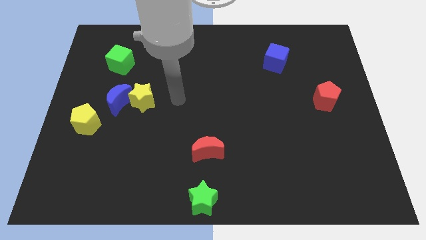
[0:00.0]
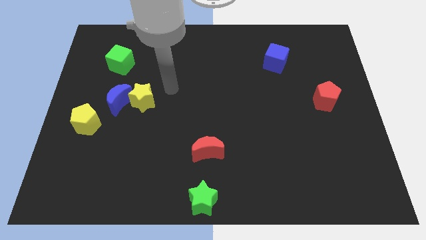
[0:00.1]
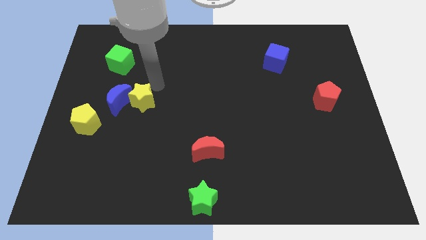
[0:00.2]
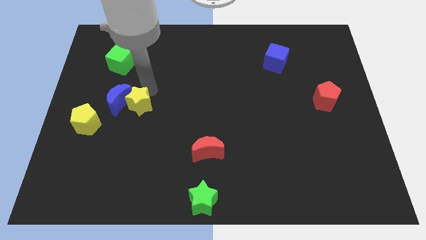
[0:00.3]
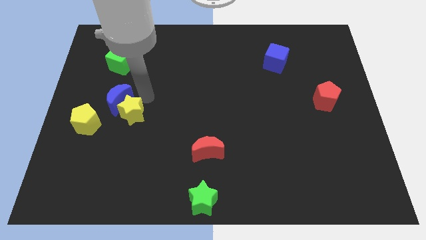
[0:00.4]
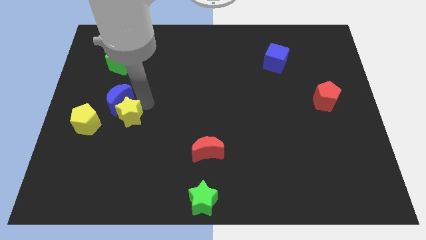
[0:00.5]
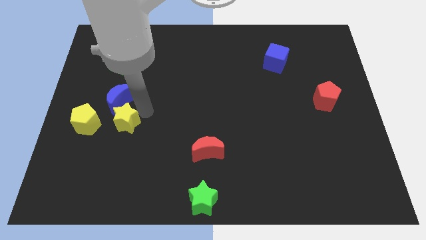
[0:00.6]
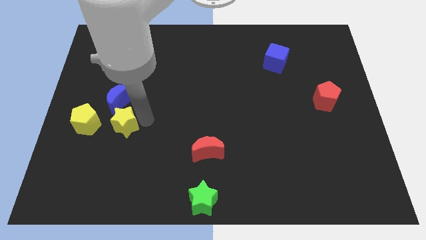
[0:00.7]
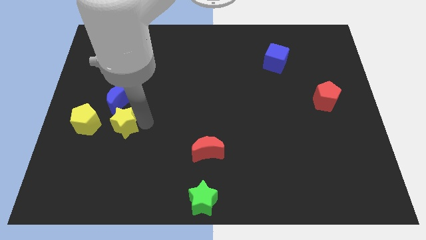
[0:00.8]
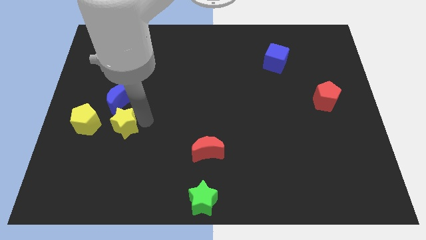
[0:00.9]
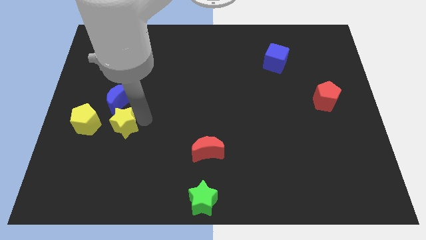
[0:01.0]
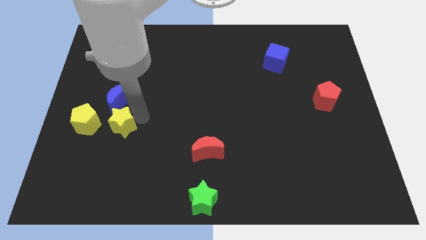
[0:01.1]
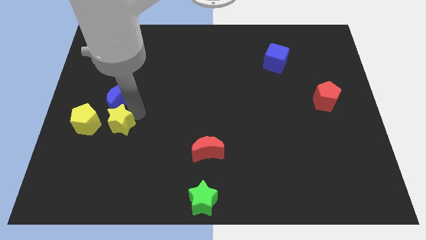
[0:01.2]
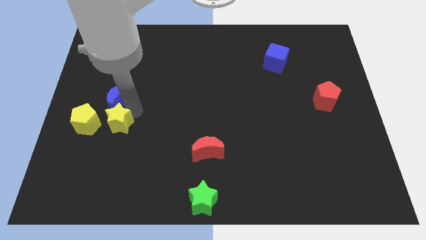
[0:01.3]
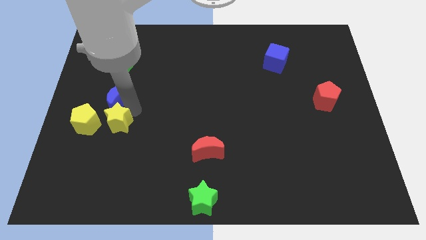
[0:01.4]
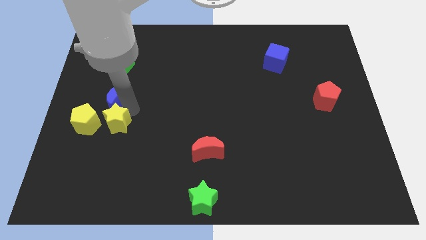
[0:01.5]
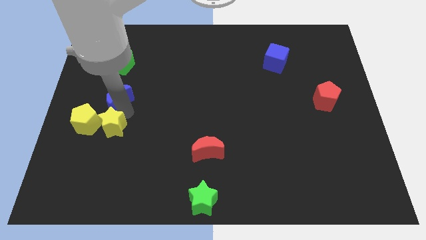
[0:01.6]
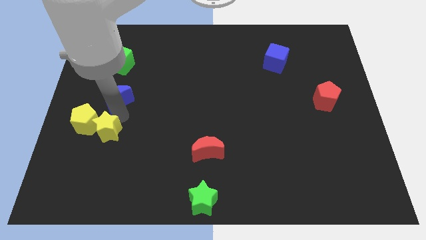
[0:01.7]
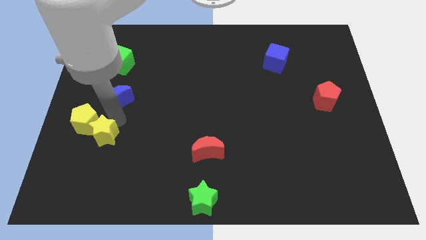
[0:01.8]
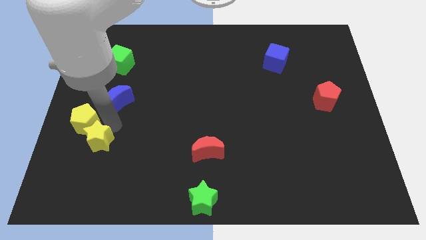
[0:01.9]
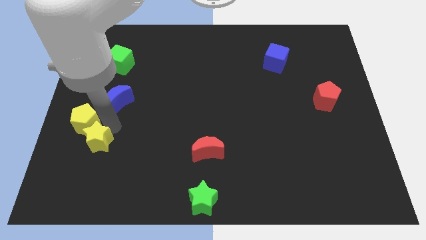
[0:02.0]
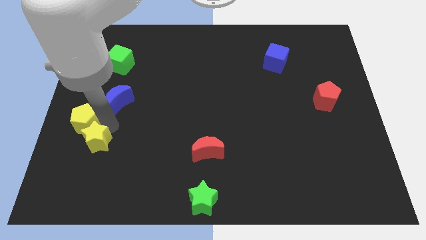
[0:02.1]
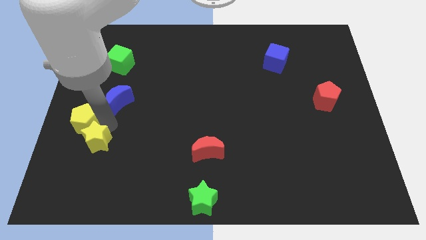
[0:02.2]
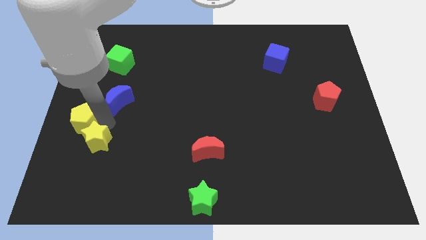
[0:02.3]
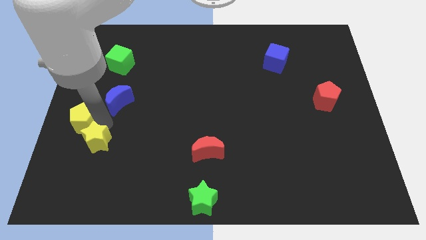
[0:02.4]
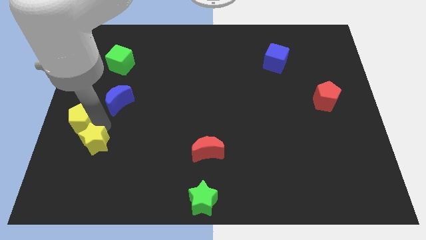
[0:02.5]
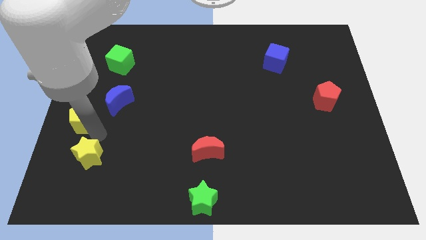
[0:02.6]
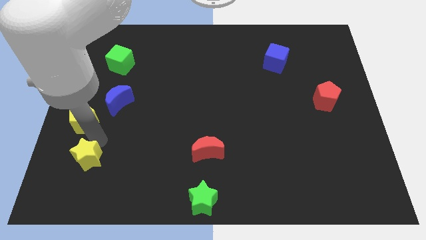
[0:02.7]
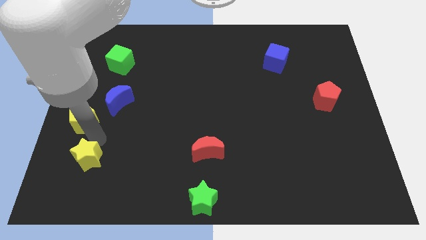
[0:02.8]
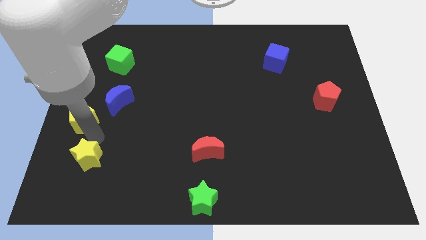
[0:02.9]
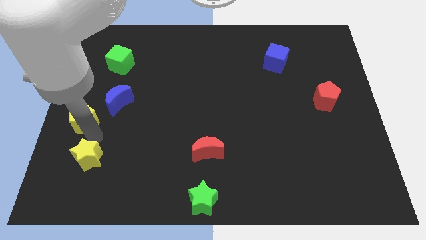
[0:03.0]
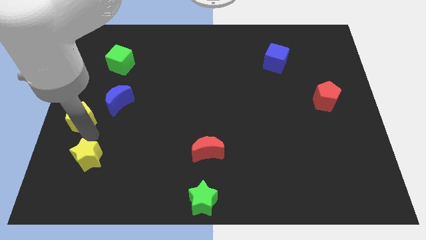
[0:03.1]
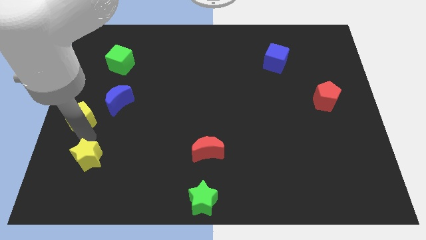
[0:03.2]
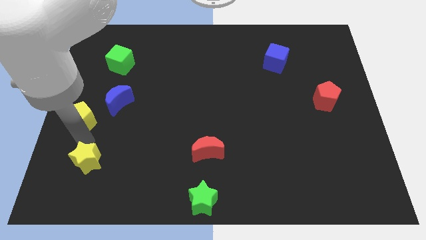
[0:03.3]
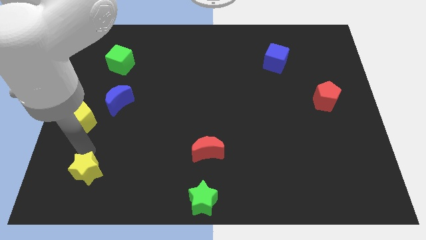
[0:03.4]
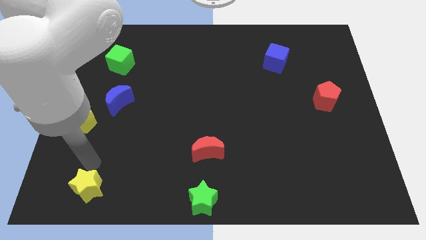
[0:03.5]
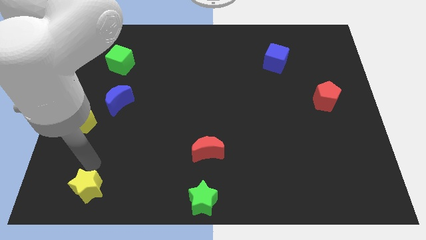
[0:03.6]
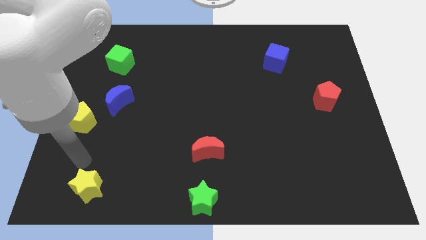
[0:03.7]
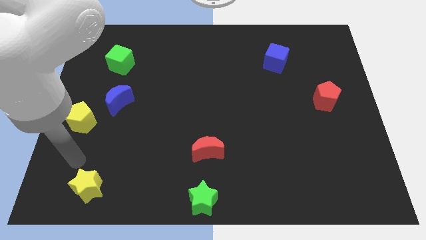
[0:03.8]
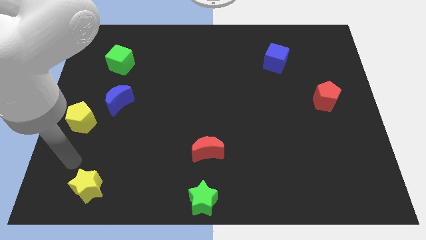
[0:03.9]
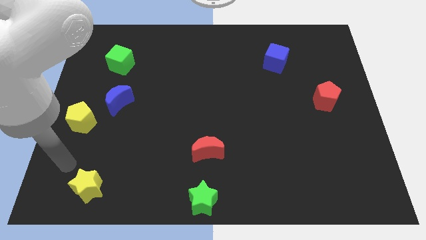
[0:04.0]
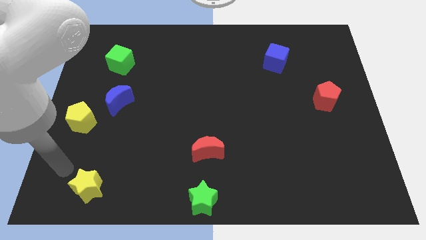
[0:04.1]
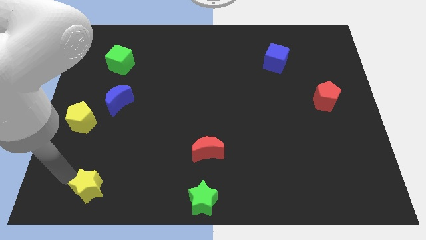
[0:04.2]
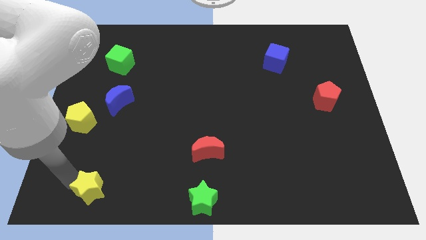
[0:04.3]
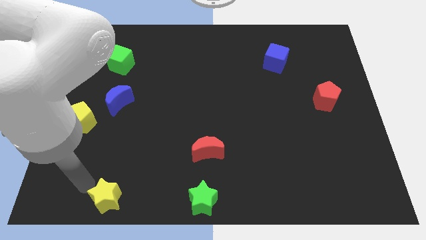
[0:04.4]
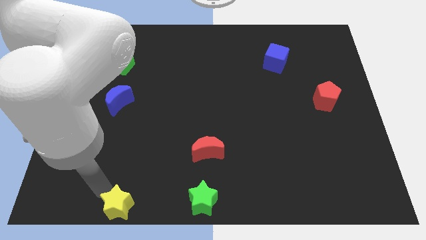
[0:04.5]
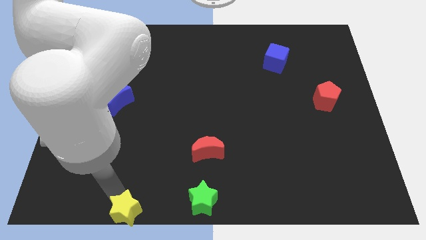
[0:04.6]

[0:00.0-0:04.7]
push the yellow star left to the green star

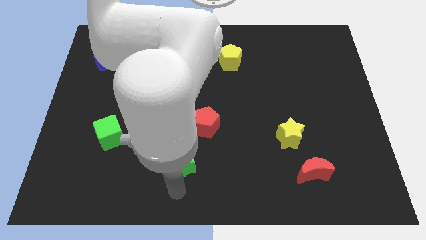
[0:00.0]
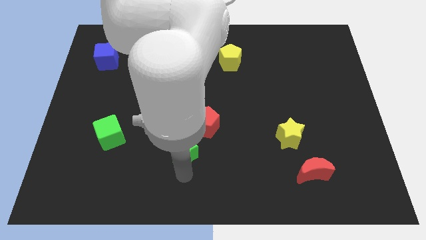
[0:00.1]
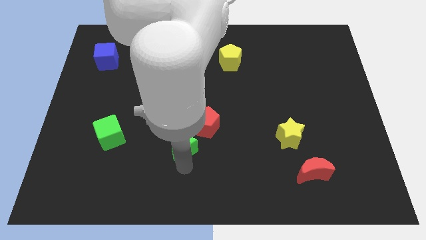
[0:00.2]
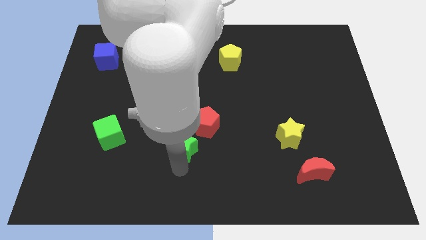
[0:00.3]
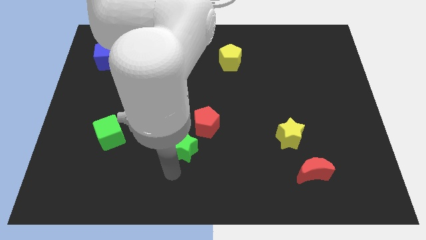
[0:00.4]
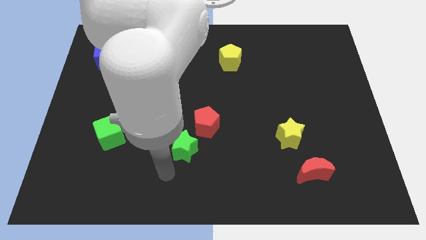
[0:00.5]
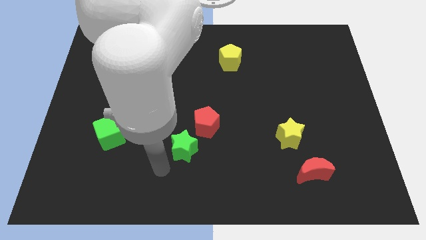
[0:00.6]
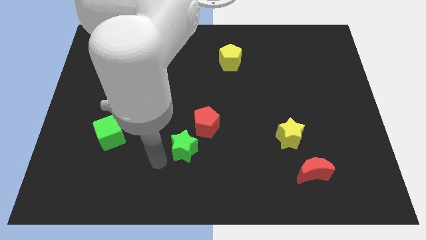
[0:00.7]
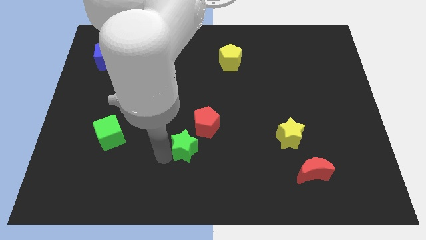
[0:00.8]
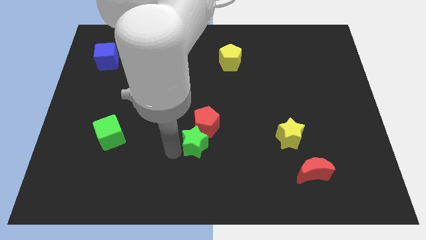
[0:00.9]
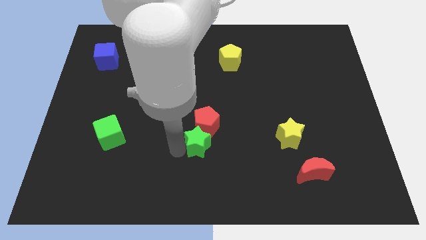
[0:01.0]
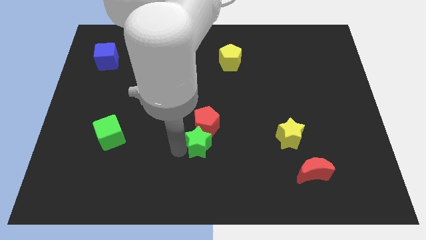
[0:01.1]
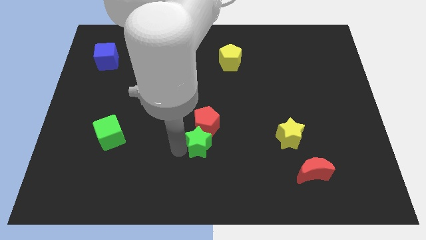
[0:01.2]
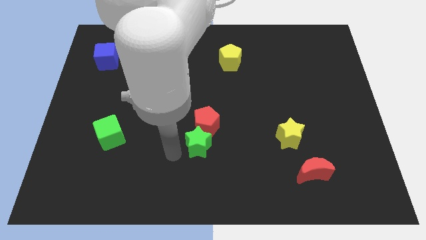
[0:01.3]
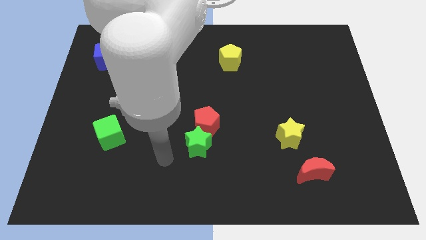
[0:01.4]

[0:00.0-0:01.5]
push the green star into the red pentagon

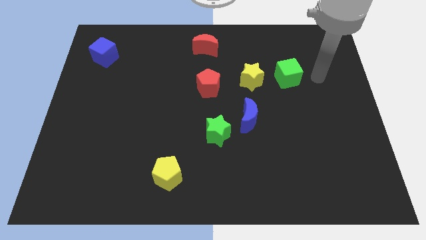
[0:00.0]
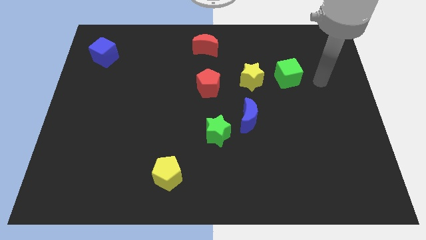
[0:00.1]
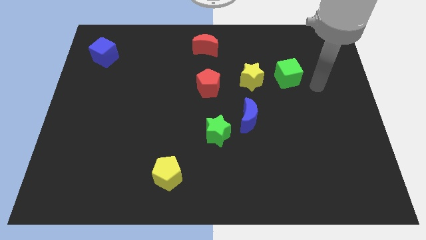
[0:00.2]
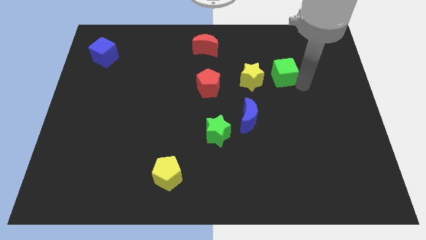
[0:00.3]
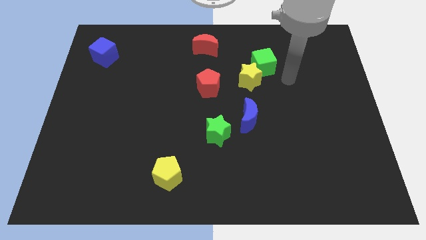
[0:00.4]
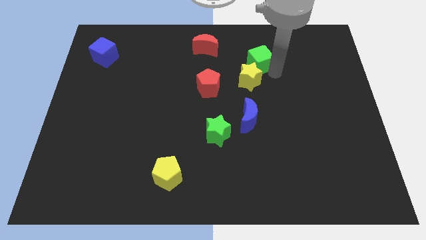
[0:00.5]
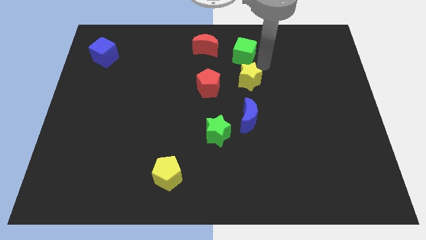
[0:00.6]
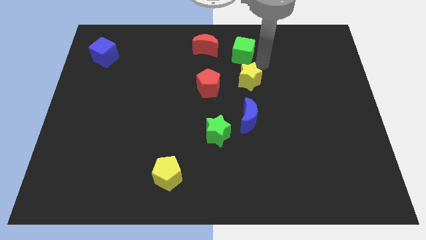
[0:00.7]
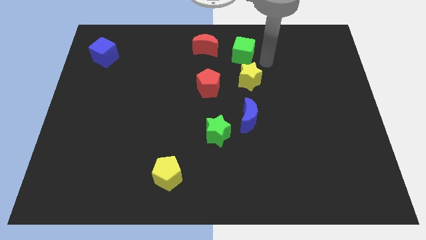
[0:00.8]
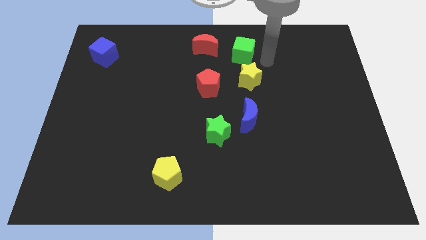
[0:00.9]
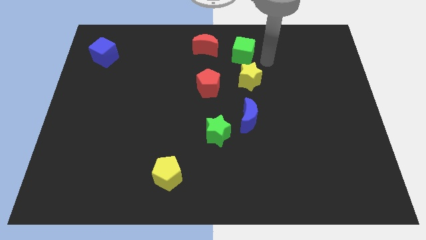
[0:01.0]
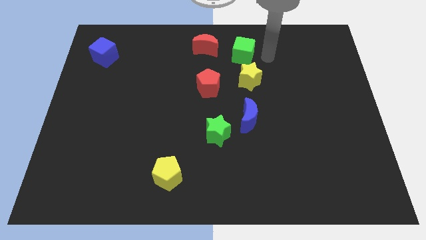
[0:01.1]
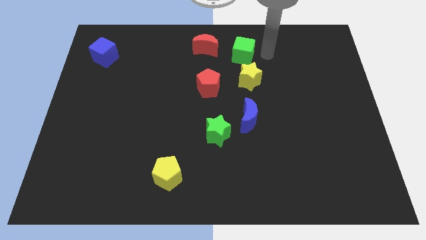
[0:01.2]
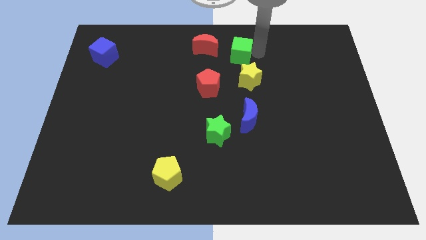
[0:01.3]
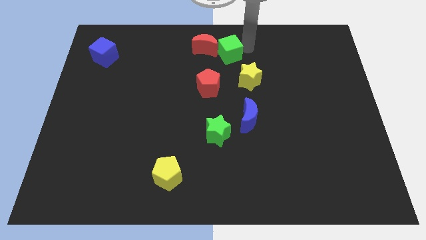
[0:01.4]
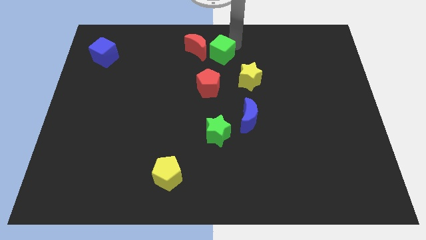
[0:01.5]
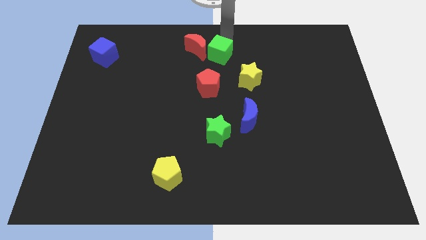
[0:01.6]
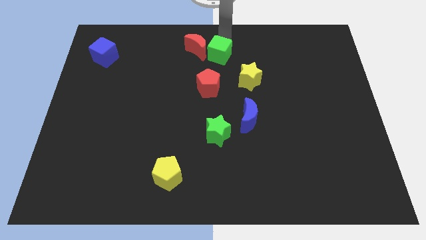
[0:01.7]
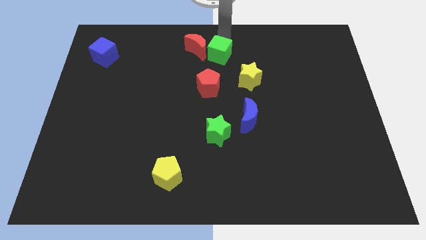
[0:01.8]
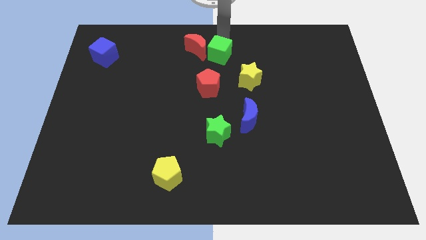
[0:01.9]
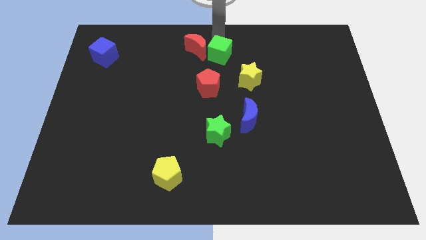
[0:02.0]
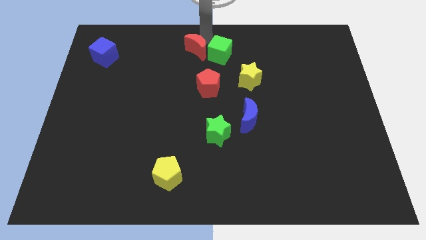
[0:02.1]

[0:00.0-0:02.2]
move the green cube to the bottom right of the red moon

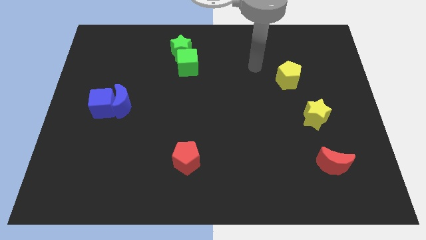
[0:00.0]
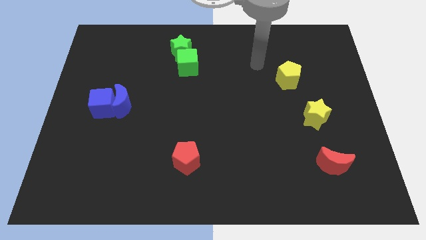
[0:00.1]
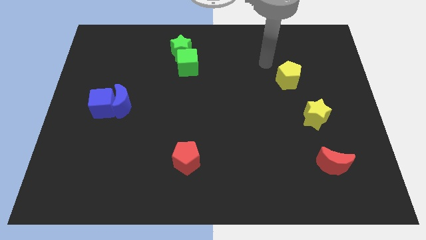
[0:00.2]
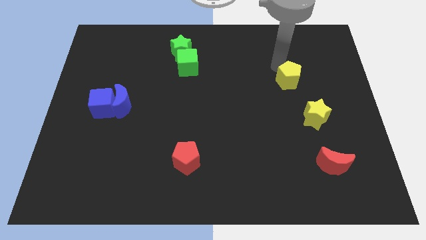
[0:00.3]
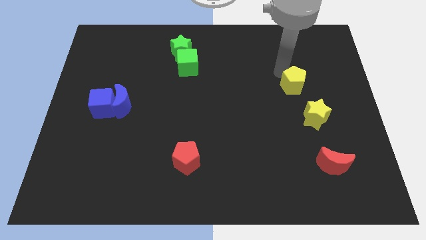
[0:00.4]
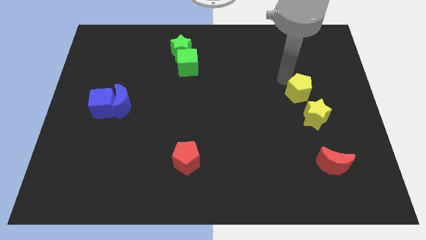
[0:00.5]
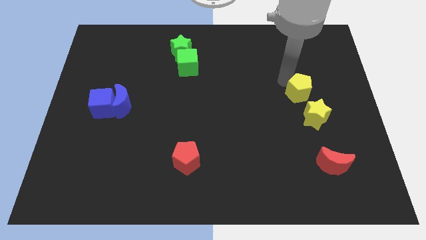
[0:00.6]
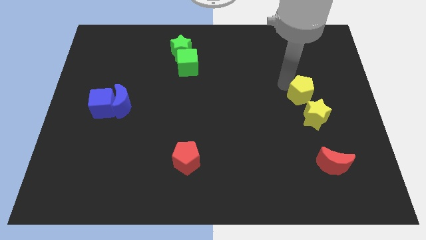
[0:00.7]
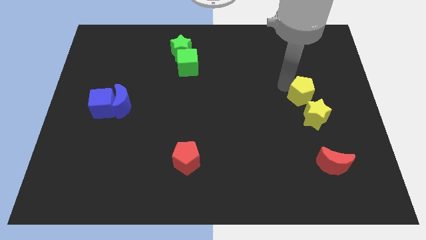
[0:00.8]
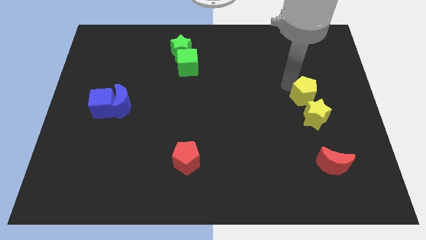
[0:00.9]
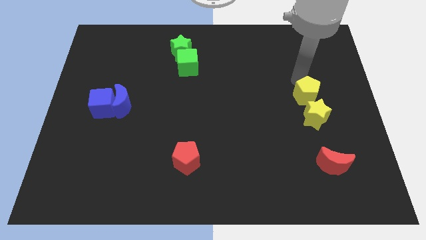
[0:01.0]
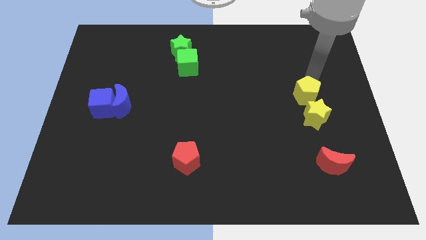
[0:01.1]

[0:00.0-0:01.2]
push yellow pentagon into yellow star
